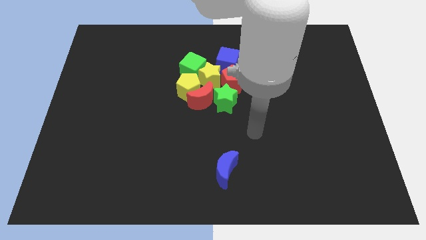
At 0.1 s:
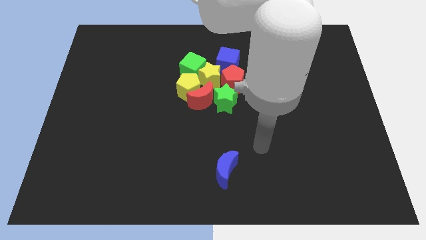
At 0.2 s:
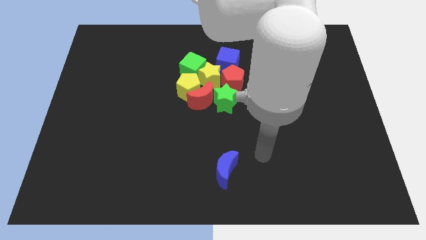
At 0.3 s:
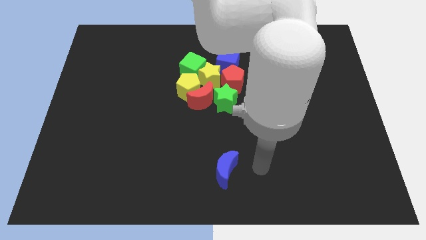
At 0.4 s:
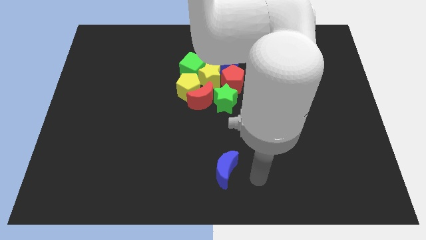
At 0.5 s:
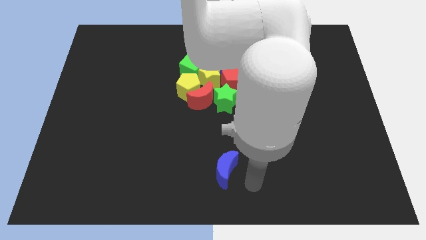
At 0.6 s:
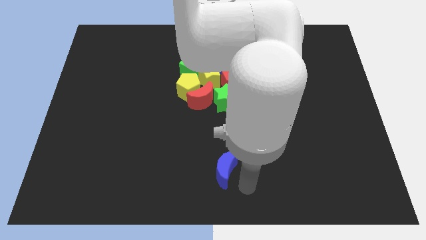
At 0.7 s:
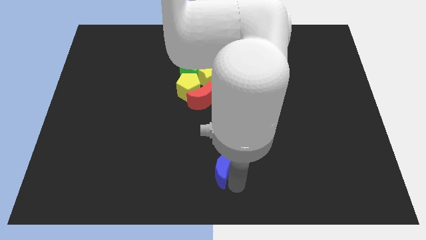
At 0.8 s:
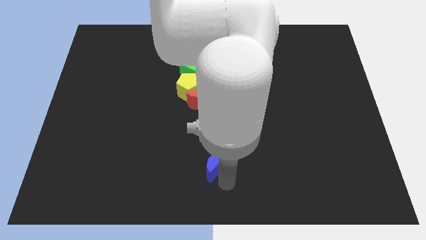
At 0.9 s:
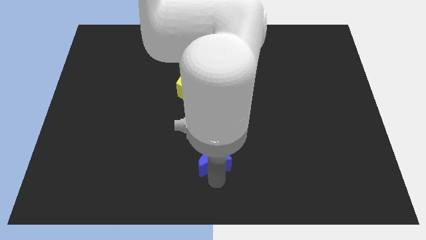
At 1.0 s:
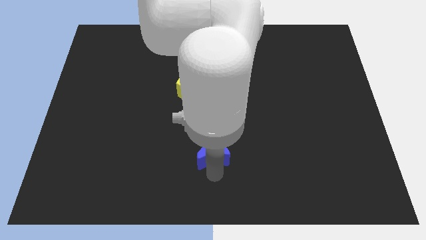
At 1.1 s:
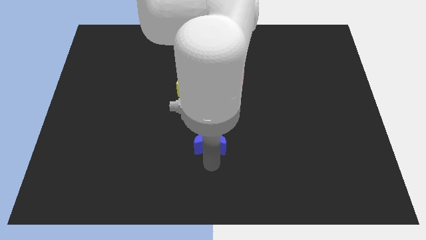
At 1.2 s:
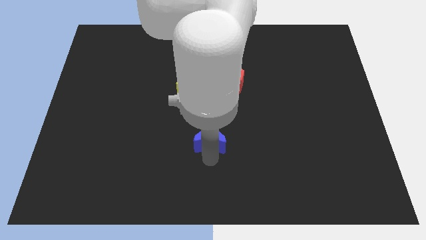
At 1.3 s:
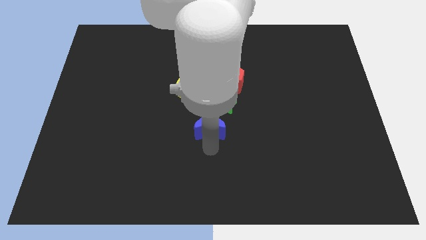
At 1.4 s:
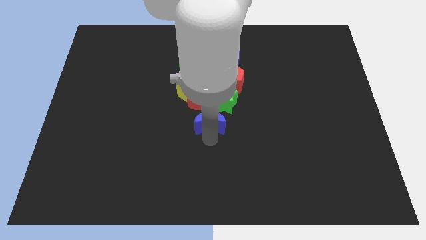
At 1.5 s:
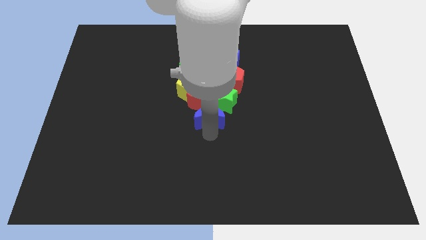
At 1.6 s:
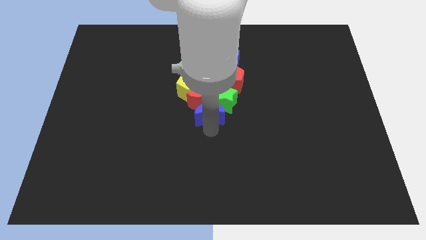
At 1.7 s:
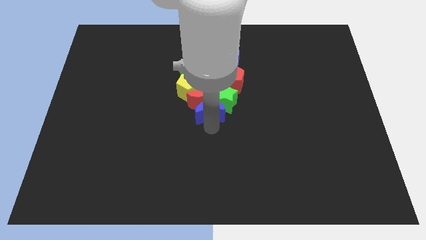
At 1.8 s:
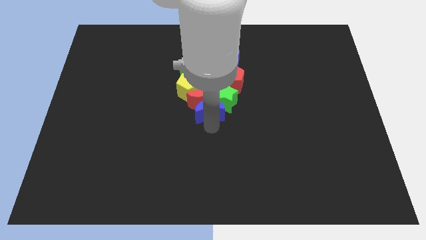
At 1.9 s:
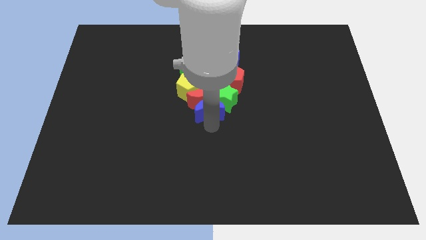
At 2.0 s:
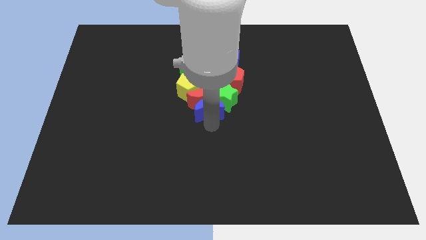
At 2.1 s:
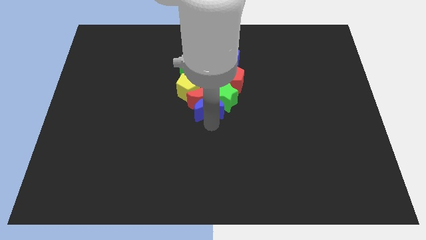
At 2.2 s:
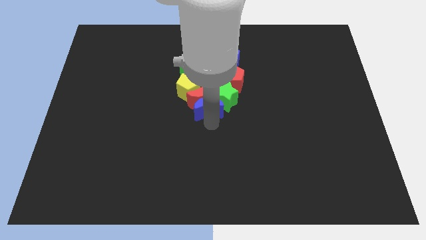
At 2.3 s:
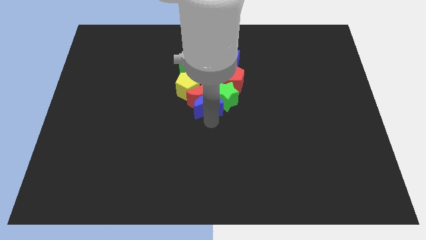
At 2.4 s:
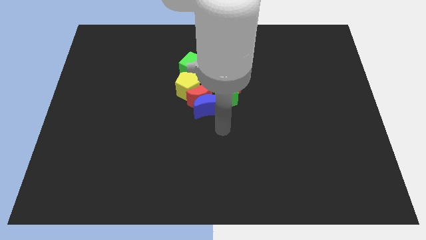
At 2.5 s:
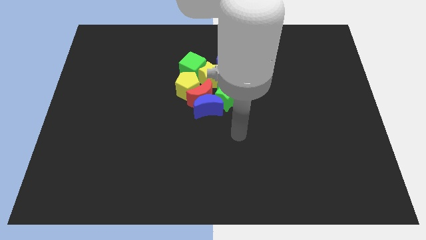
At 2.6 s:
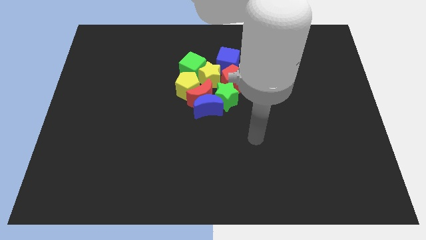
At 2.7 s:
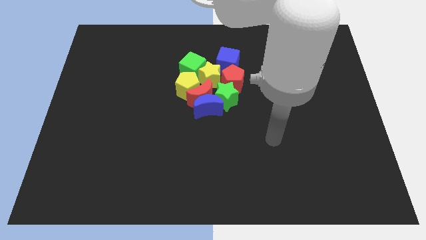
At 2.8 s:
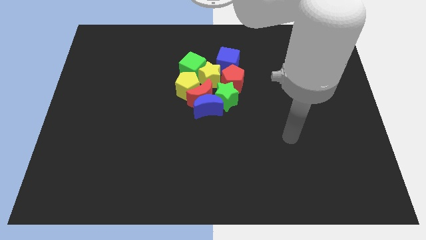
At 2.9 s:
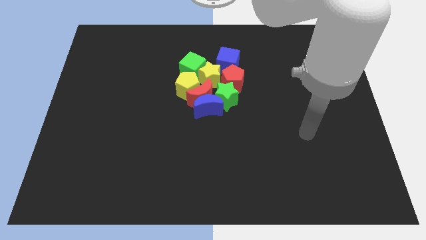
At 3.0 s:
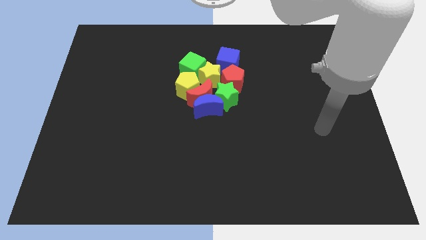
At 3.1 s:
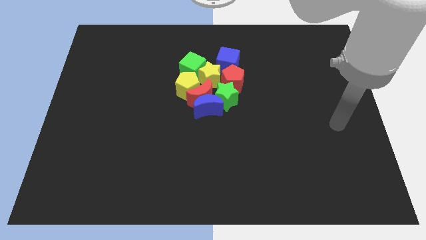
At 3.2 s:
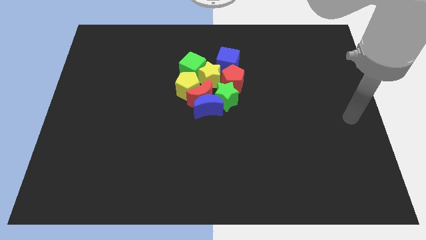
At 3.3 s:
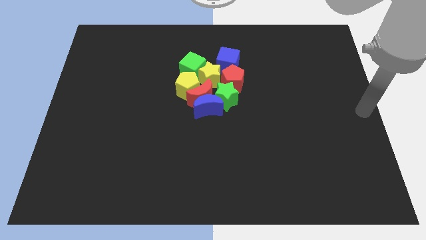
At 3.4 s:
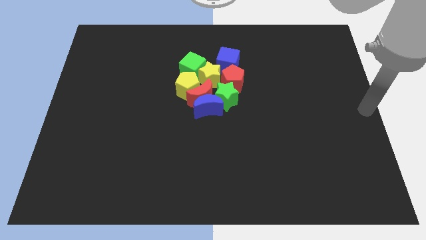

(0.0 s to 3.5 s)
drag the blue crescent into the group of blocks

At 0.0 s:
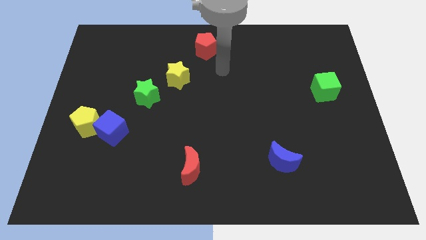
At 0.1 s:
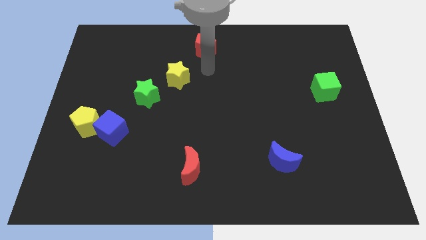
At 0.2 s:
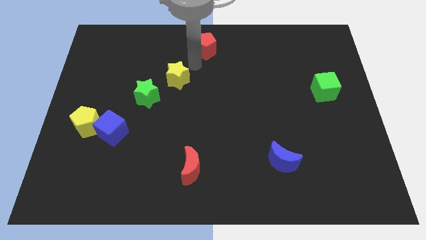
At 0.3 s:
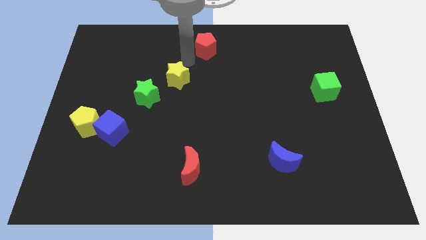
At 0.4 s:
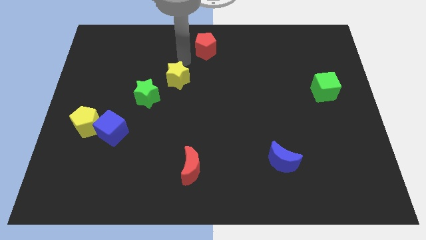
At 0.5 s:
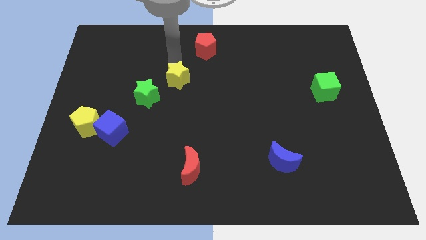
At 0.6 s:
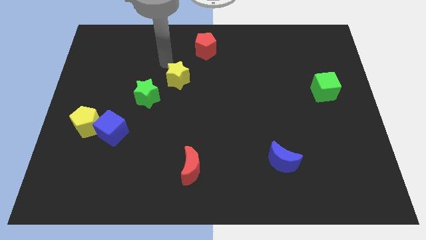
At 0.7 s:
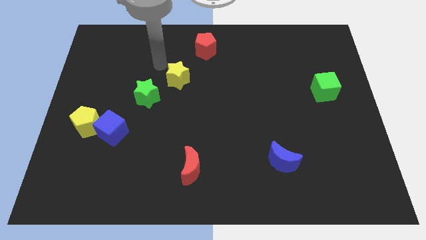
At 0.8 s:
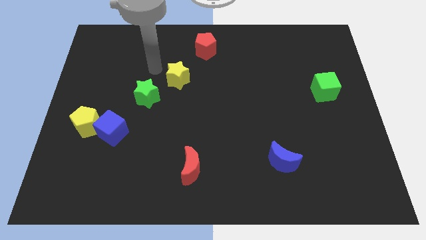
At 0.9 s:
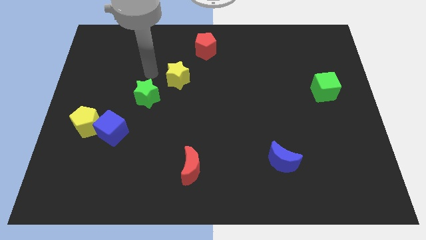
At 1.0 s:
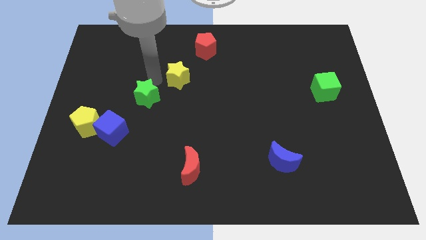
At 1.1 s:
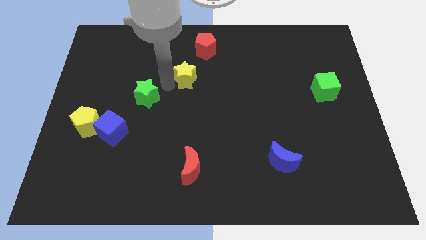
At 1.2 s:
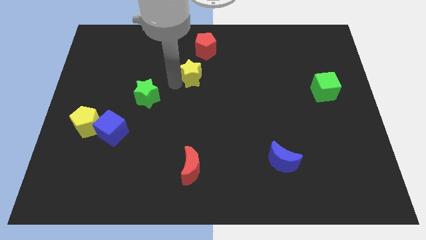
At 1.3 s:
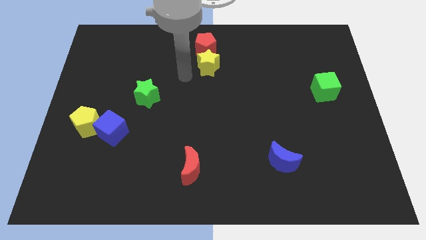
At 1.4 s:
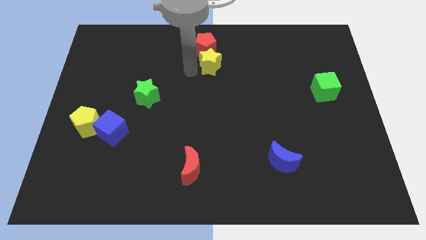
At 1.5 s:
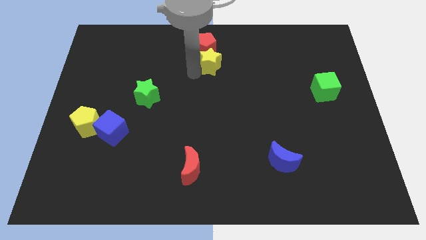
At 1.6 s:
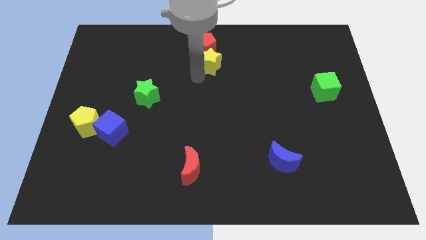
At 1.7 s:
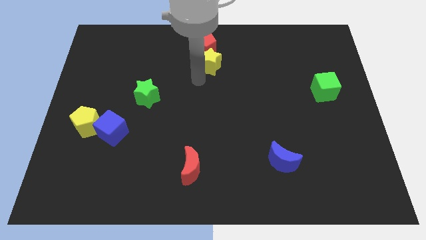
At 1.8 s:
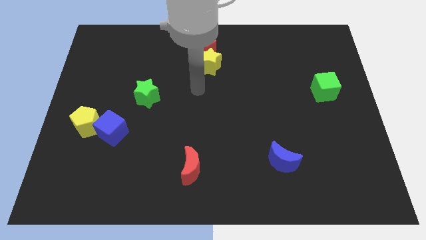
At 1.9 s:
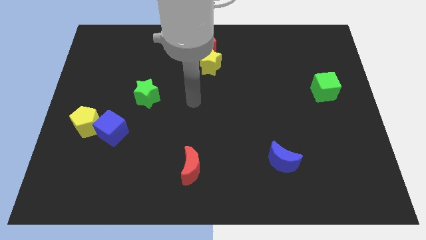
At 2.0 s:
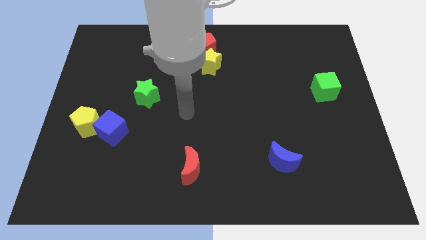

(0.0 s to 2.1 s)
place the yellow star below red pentagon

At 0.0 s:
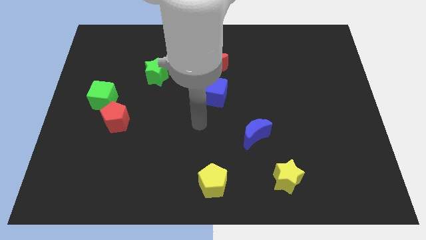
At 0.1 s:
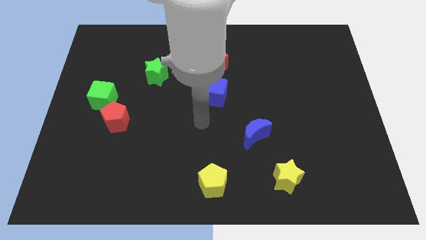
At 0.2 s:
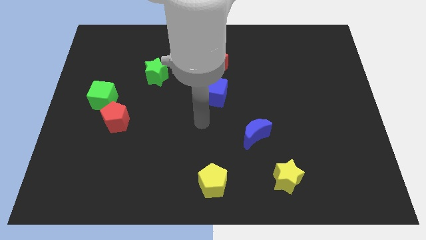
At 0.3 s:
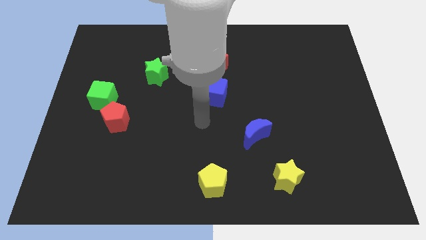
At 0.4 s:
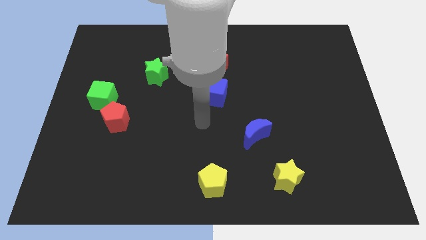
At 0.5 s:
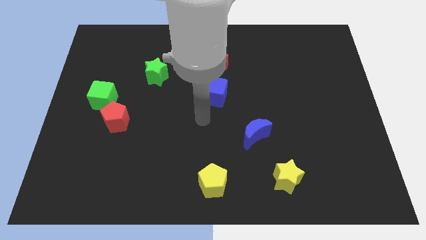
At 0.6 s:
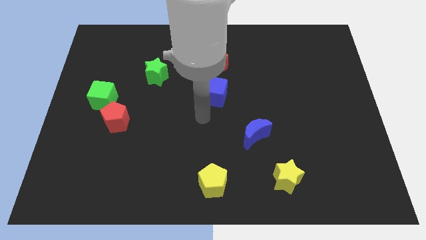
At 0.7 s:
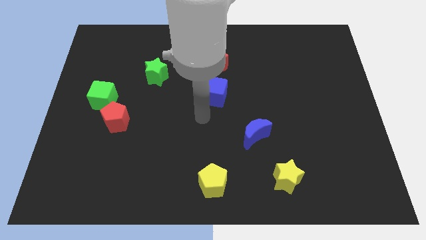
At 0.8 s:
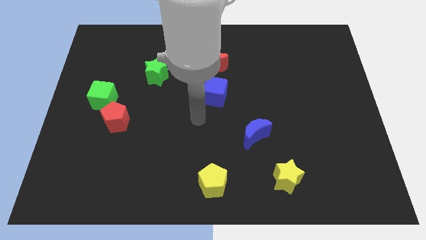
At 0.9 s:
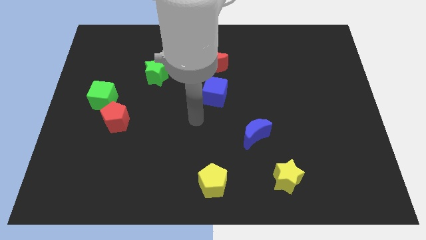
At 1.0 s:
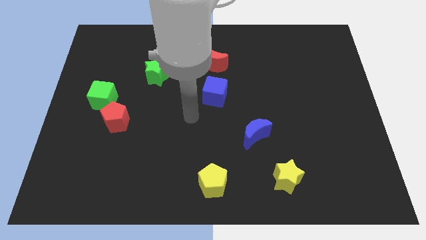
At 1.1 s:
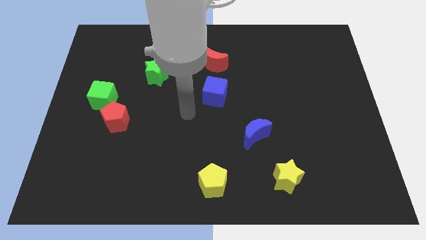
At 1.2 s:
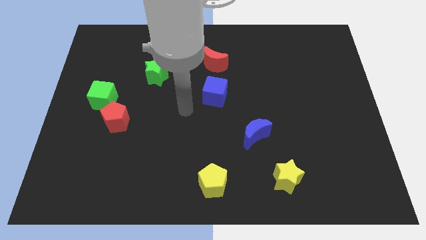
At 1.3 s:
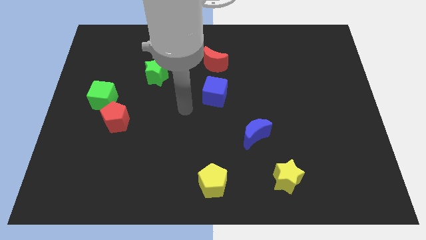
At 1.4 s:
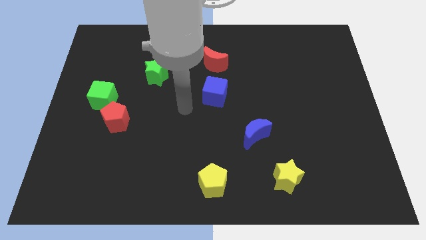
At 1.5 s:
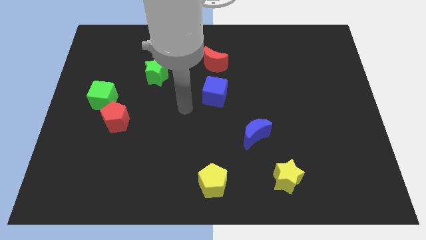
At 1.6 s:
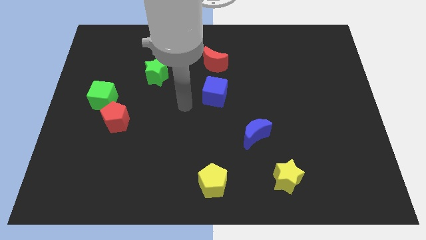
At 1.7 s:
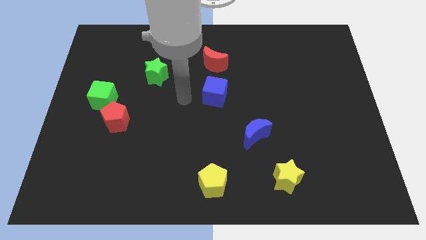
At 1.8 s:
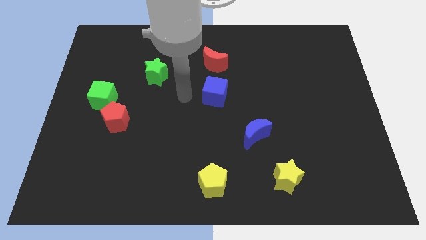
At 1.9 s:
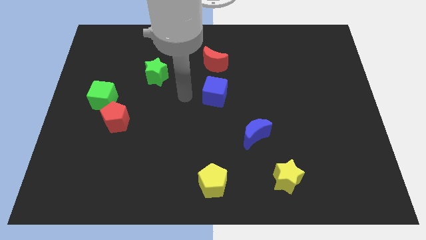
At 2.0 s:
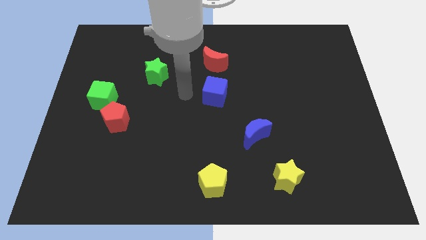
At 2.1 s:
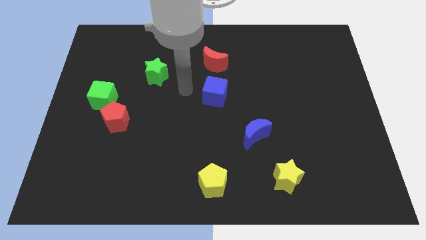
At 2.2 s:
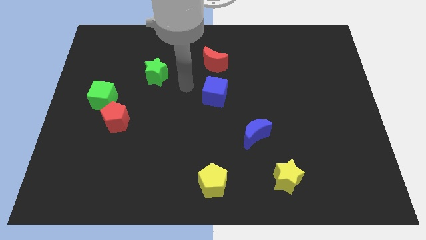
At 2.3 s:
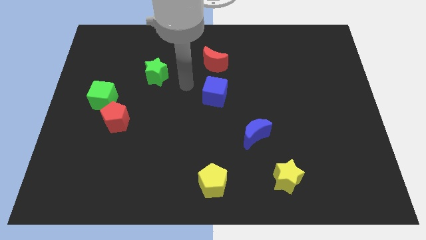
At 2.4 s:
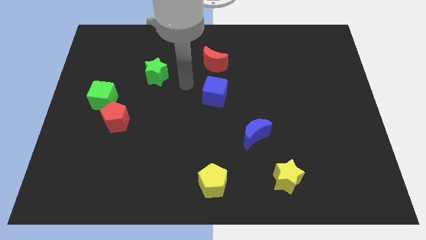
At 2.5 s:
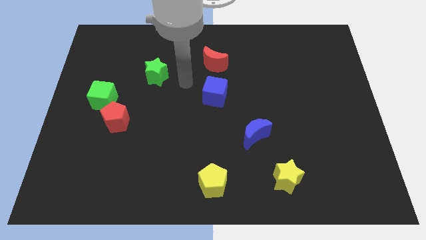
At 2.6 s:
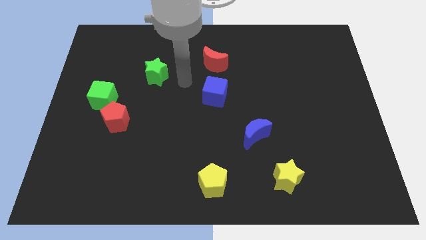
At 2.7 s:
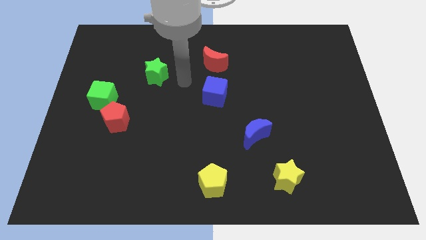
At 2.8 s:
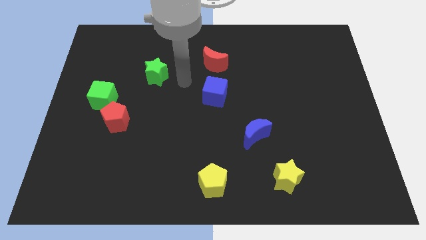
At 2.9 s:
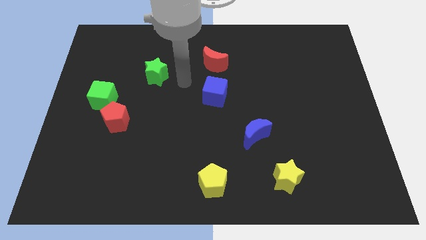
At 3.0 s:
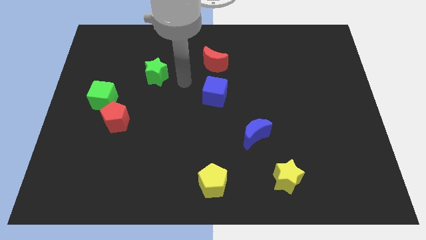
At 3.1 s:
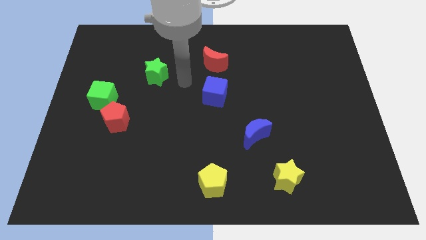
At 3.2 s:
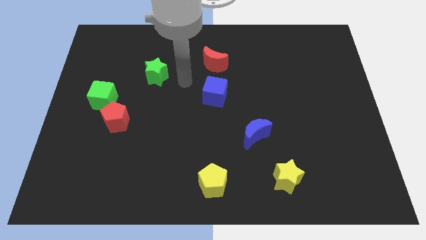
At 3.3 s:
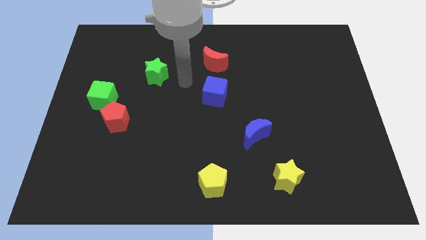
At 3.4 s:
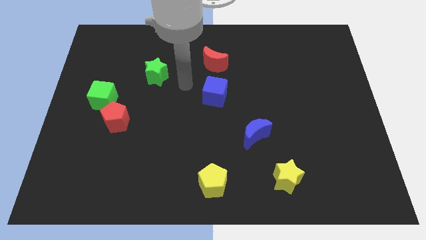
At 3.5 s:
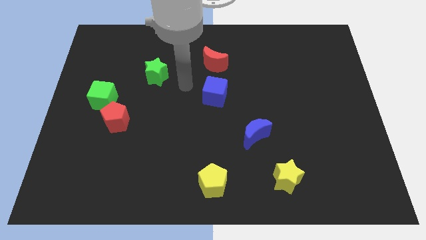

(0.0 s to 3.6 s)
move the arm to the right of the green star
